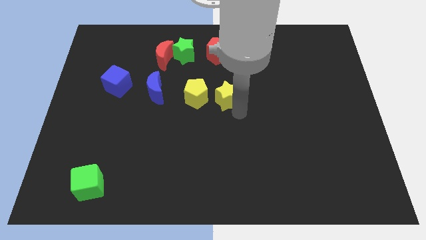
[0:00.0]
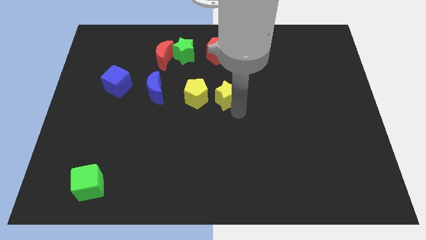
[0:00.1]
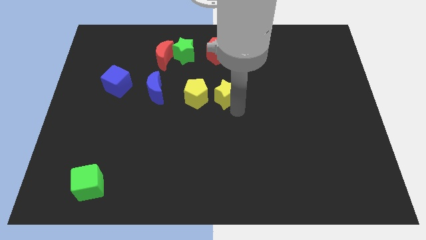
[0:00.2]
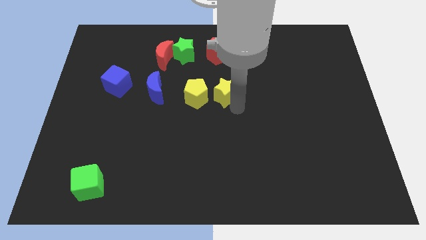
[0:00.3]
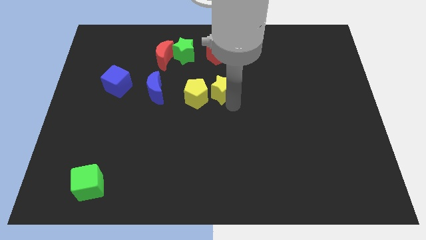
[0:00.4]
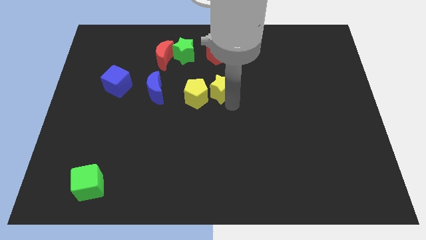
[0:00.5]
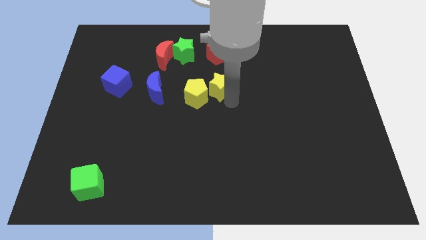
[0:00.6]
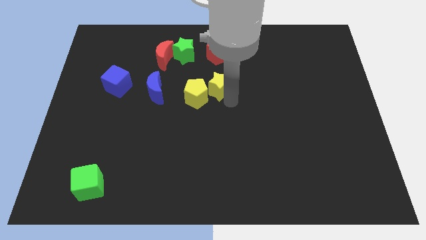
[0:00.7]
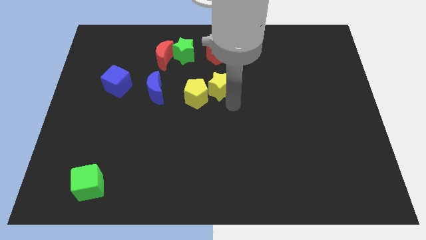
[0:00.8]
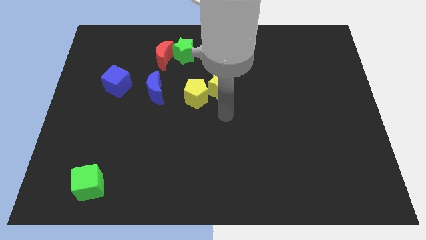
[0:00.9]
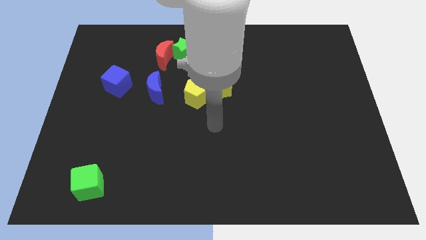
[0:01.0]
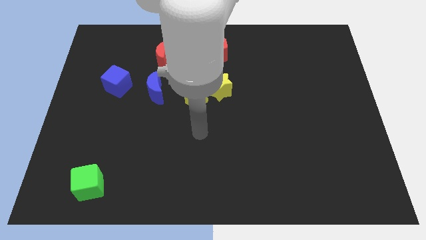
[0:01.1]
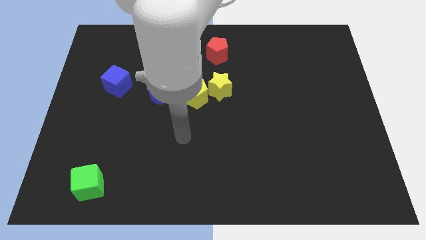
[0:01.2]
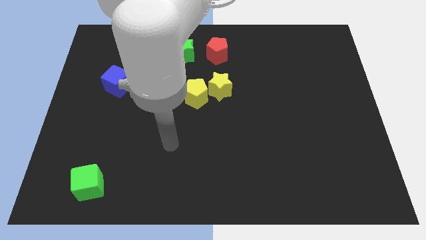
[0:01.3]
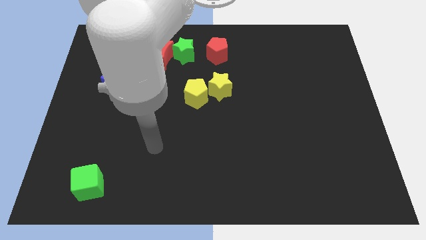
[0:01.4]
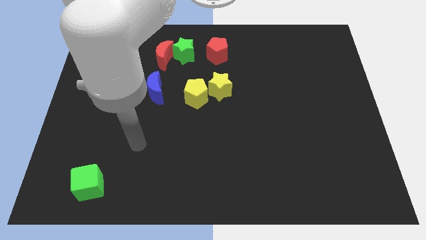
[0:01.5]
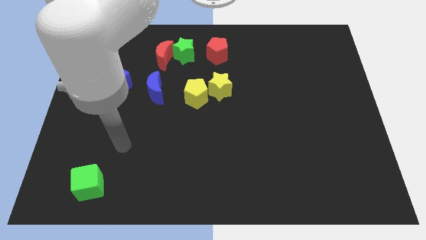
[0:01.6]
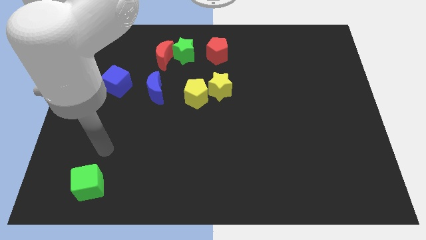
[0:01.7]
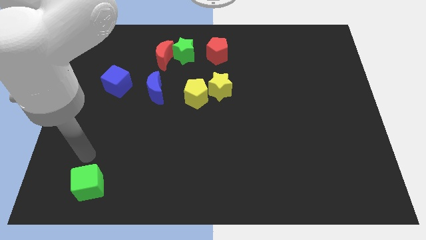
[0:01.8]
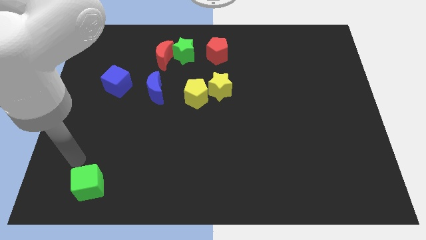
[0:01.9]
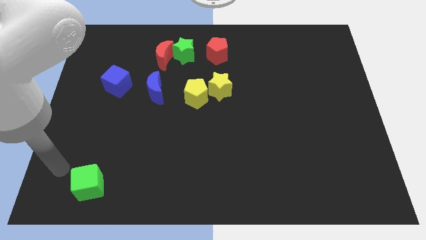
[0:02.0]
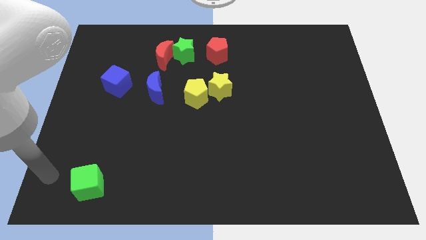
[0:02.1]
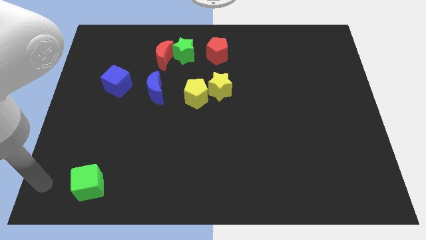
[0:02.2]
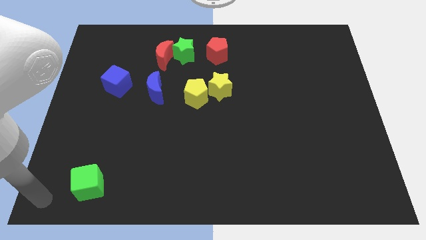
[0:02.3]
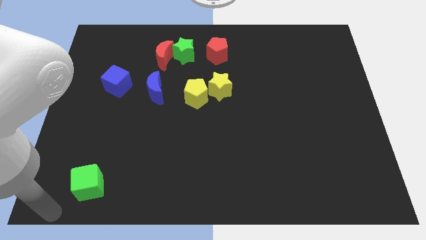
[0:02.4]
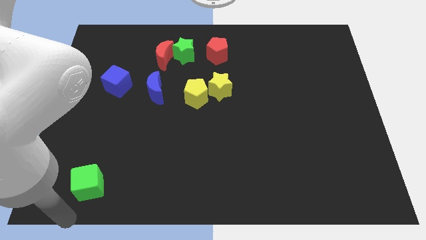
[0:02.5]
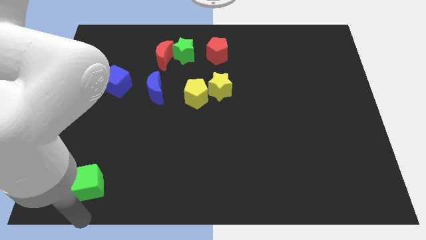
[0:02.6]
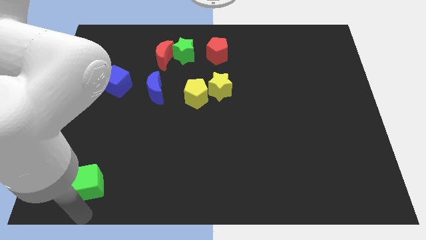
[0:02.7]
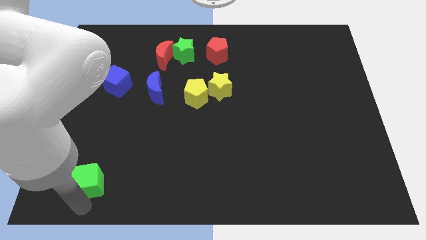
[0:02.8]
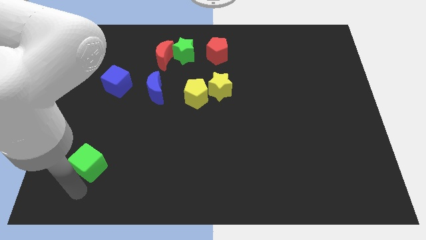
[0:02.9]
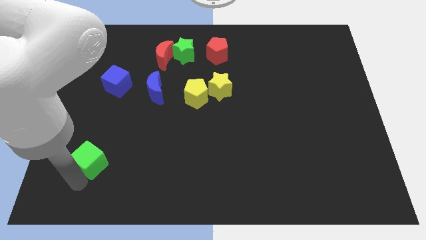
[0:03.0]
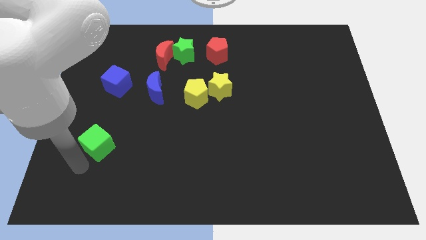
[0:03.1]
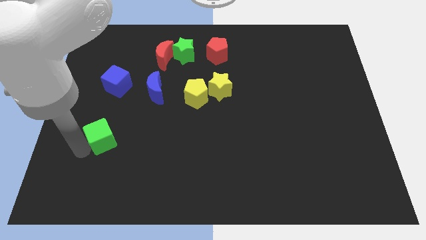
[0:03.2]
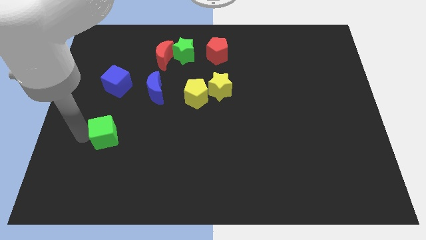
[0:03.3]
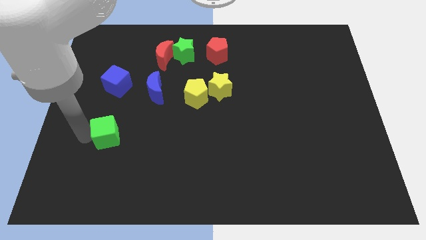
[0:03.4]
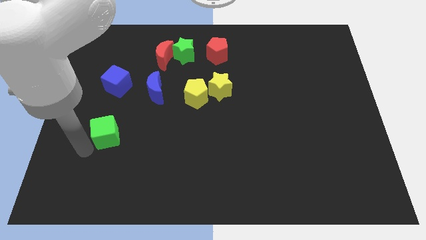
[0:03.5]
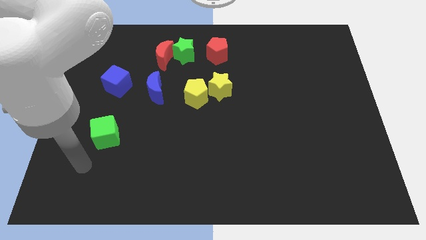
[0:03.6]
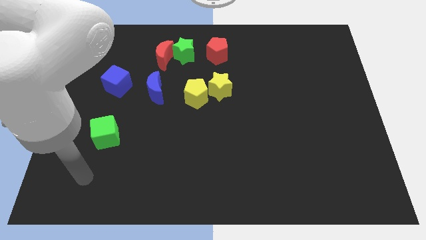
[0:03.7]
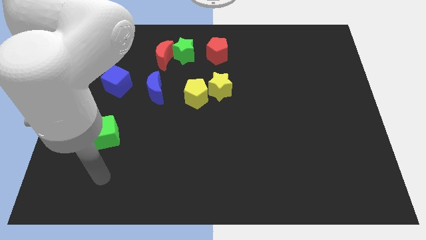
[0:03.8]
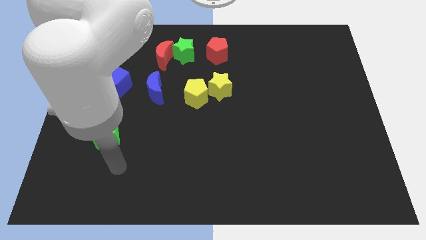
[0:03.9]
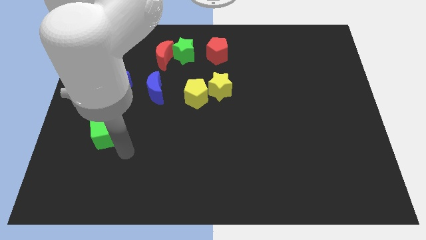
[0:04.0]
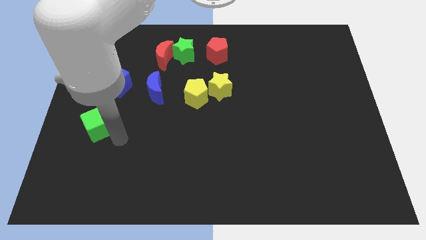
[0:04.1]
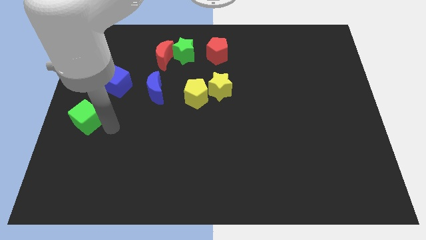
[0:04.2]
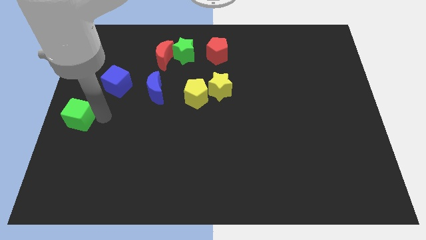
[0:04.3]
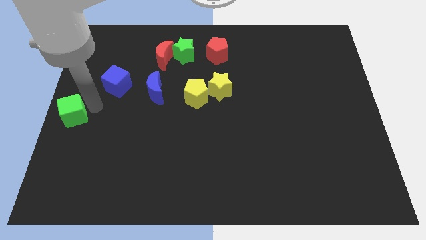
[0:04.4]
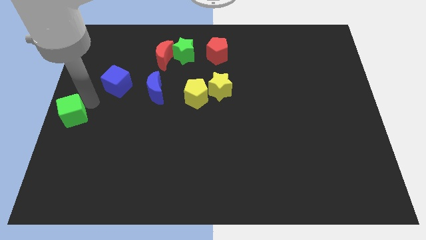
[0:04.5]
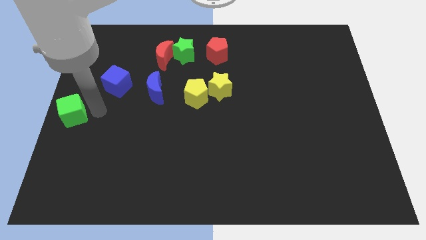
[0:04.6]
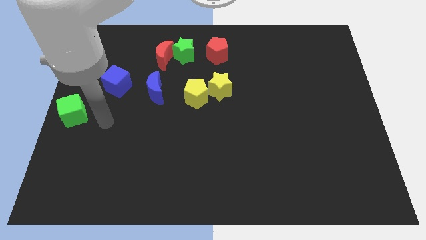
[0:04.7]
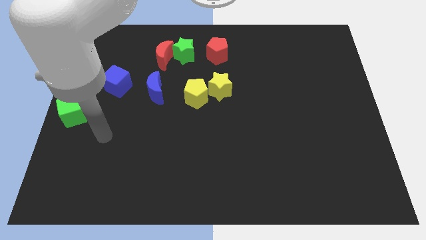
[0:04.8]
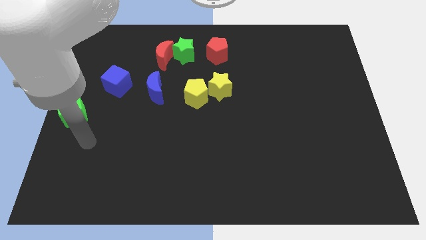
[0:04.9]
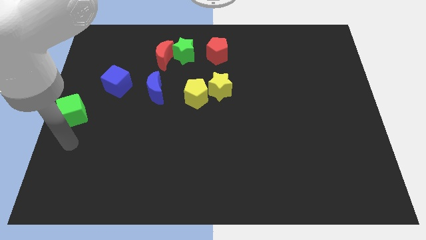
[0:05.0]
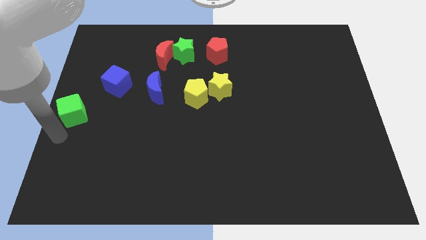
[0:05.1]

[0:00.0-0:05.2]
push the green cube to the center left corner

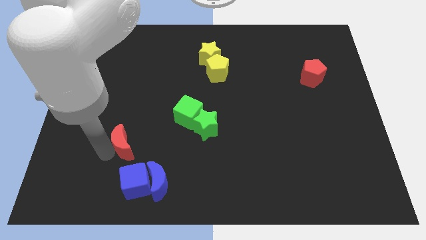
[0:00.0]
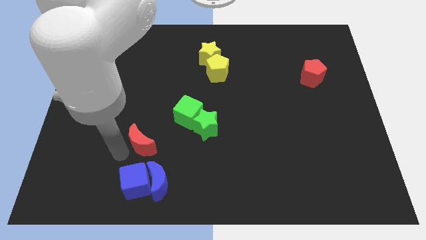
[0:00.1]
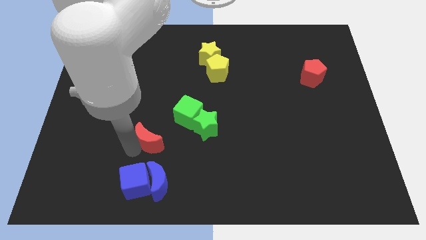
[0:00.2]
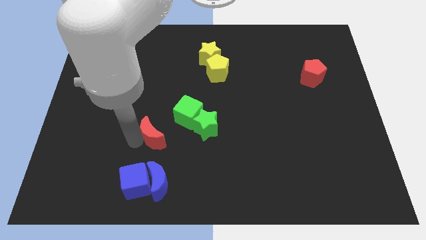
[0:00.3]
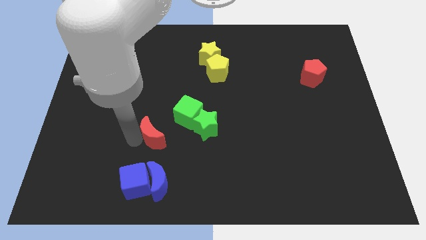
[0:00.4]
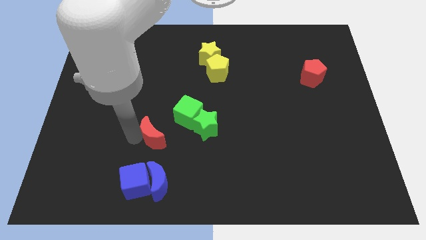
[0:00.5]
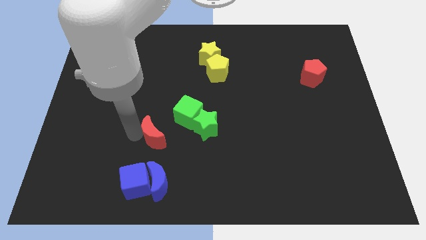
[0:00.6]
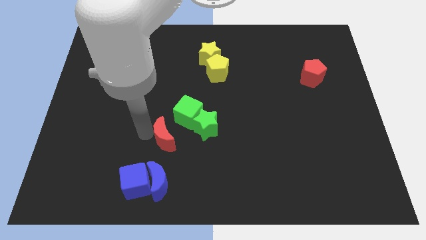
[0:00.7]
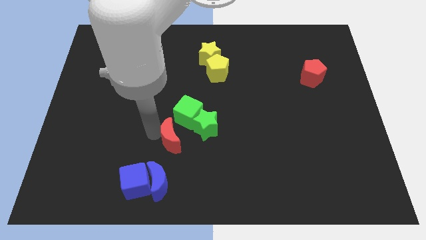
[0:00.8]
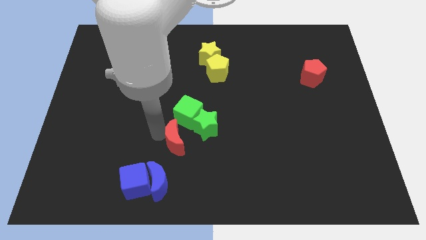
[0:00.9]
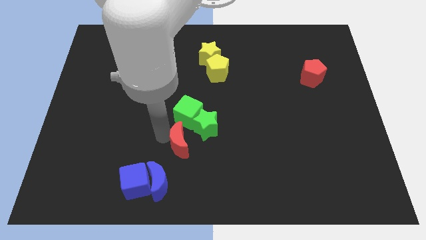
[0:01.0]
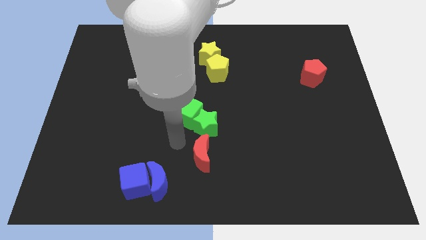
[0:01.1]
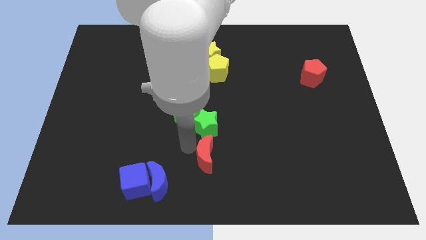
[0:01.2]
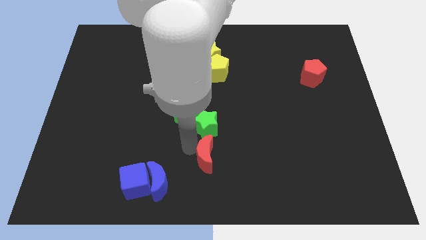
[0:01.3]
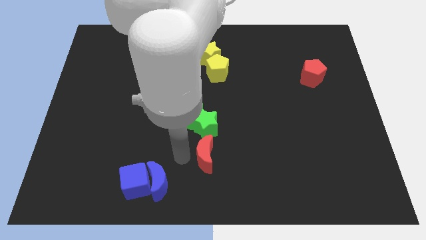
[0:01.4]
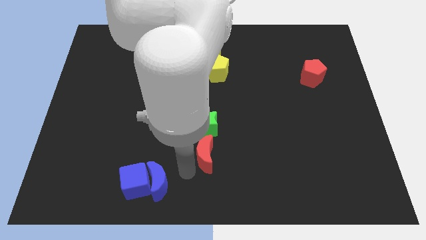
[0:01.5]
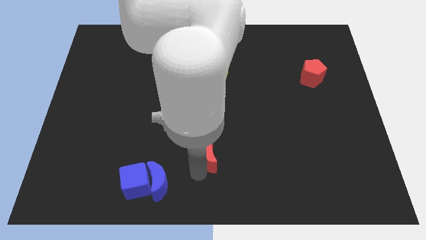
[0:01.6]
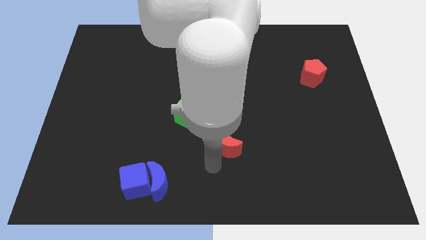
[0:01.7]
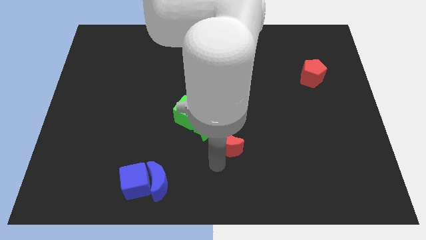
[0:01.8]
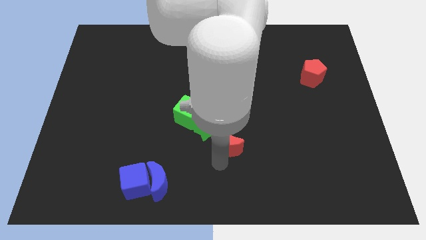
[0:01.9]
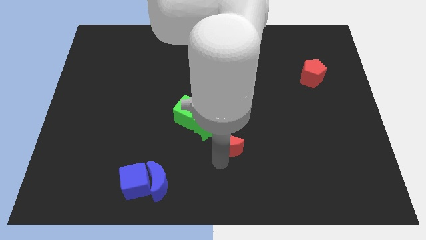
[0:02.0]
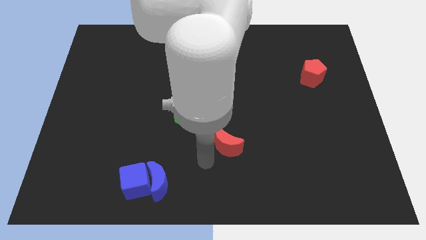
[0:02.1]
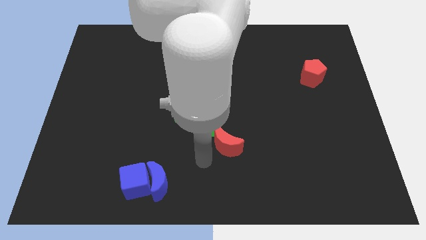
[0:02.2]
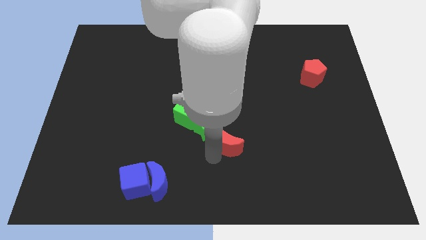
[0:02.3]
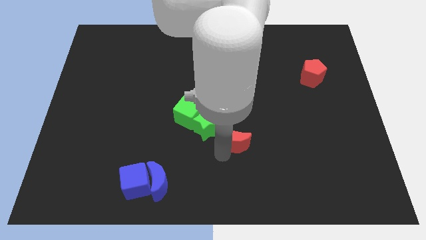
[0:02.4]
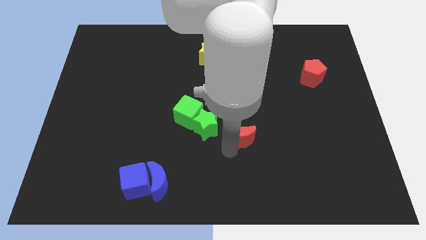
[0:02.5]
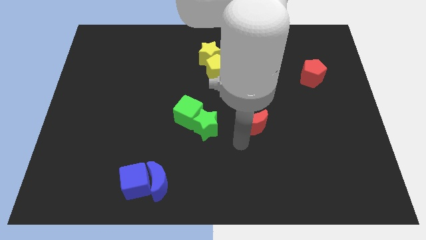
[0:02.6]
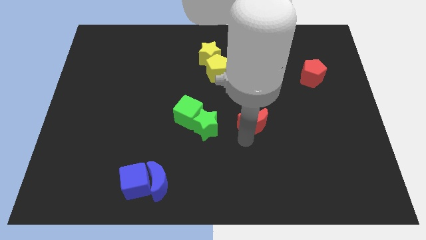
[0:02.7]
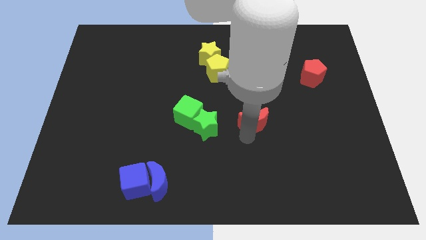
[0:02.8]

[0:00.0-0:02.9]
slide the red crescent towards red pentagon

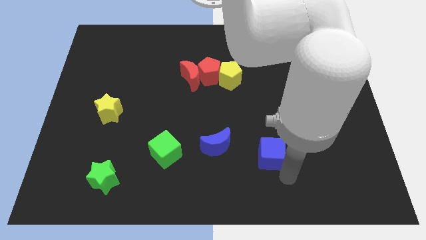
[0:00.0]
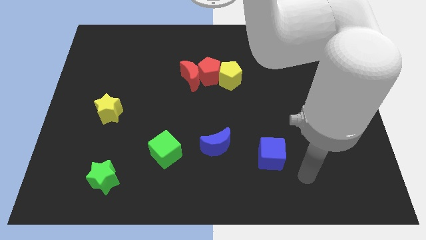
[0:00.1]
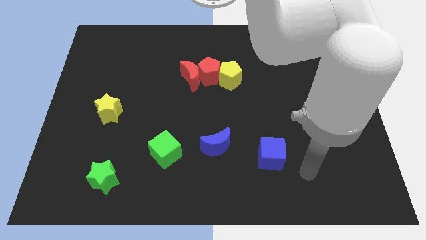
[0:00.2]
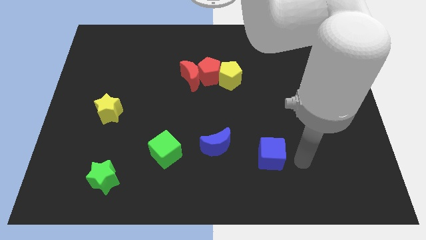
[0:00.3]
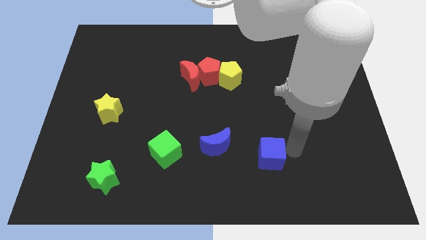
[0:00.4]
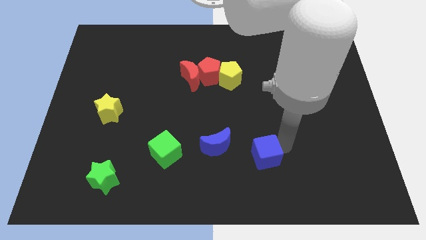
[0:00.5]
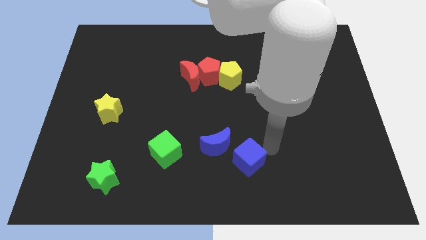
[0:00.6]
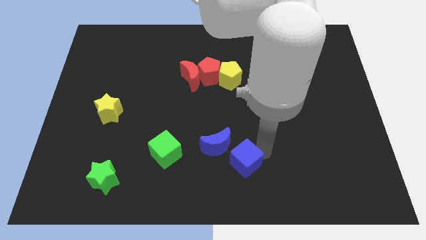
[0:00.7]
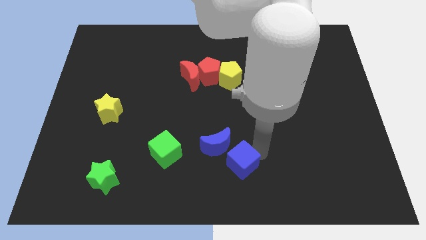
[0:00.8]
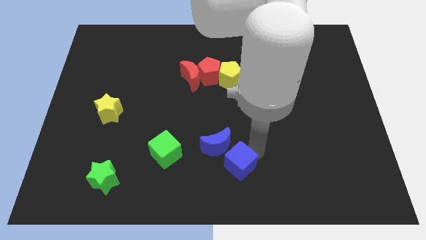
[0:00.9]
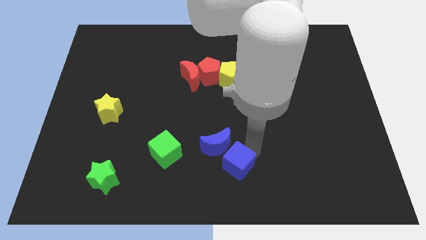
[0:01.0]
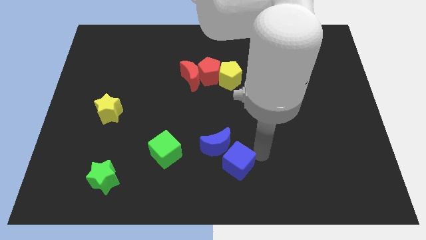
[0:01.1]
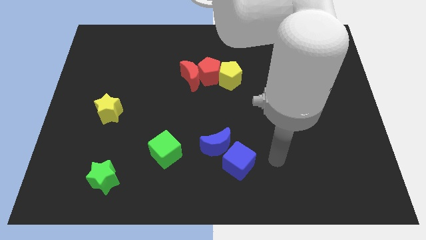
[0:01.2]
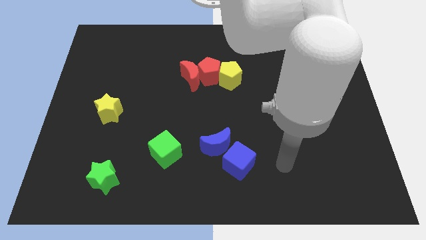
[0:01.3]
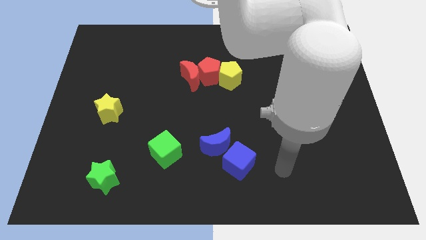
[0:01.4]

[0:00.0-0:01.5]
move blue cube diagonally below blue moon
